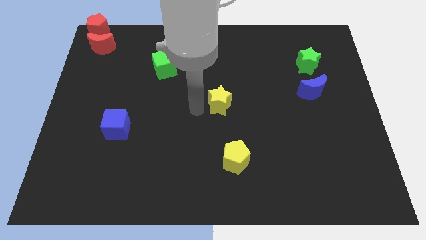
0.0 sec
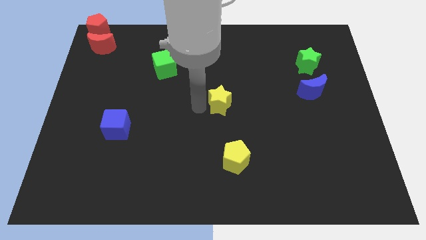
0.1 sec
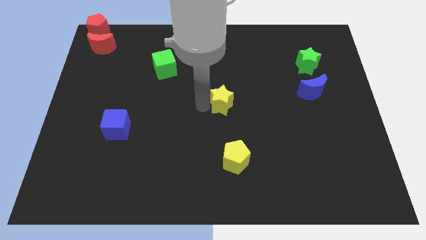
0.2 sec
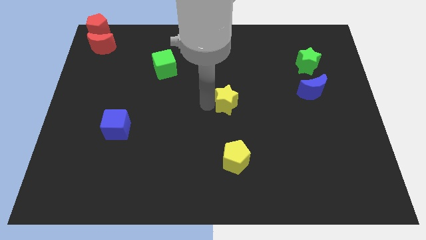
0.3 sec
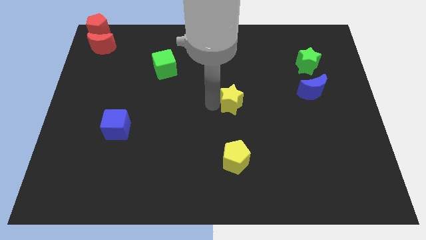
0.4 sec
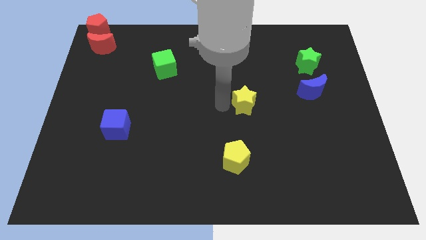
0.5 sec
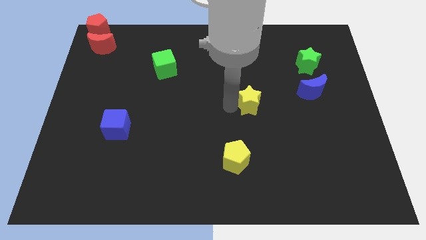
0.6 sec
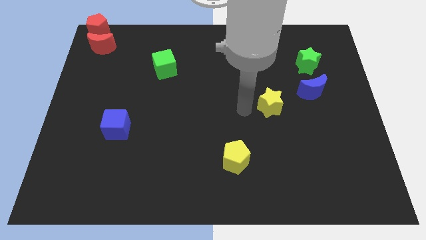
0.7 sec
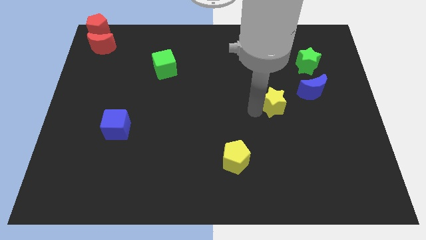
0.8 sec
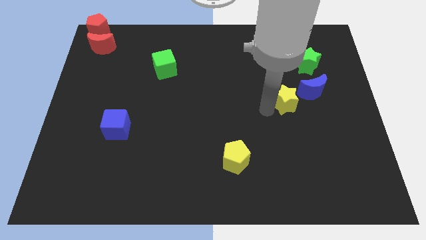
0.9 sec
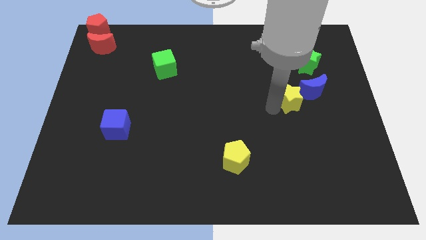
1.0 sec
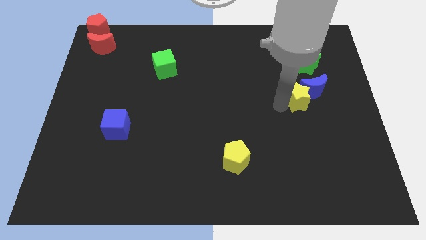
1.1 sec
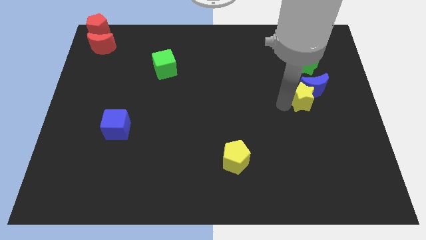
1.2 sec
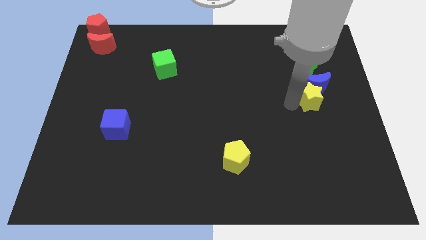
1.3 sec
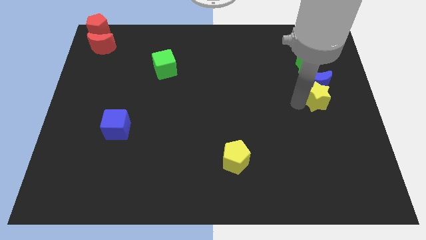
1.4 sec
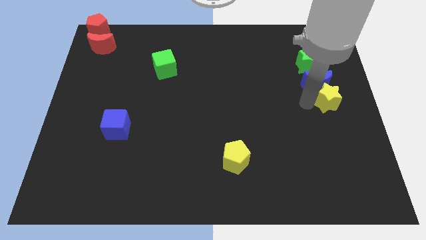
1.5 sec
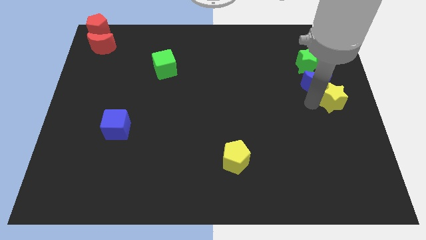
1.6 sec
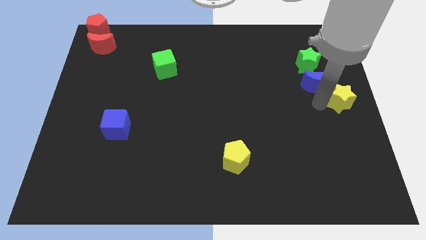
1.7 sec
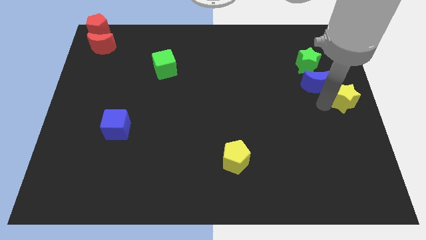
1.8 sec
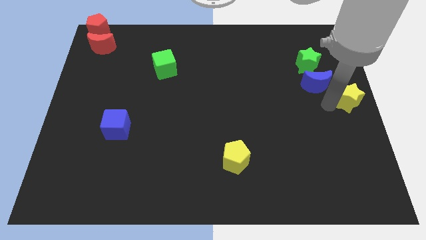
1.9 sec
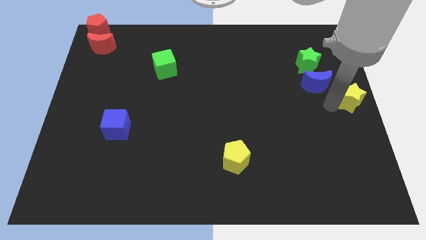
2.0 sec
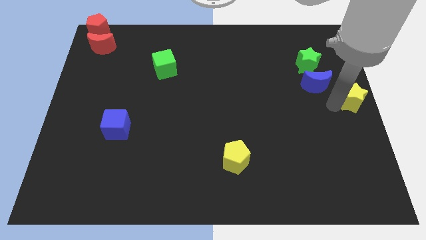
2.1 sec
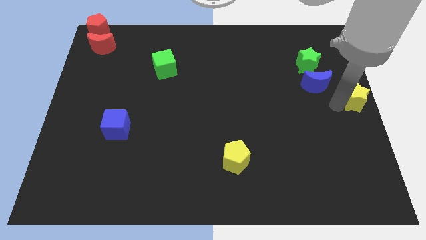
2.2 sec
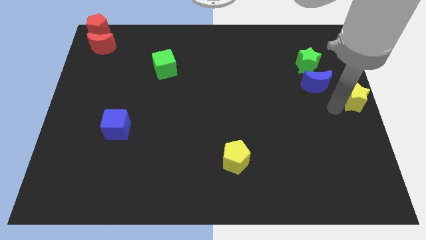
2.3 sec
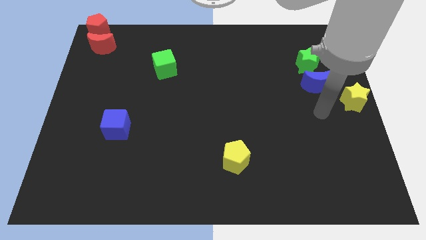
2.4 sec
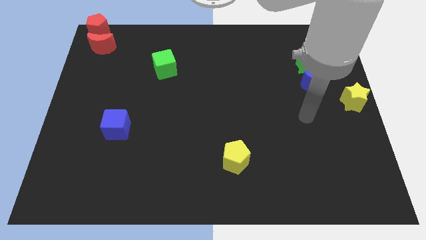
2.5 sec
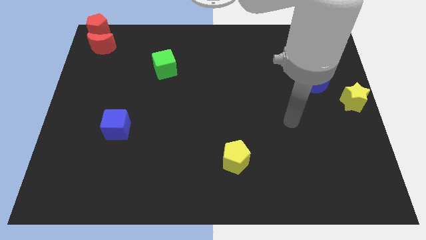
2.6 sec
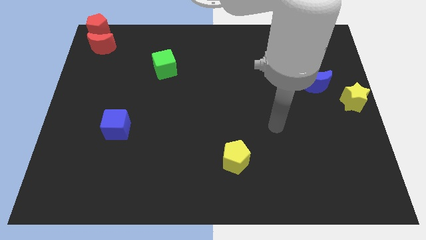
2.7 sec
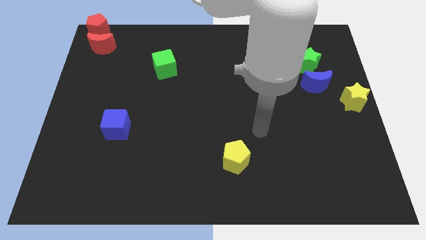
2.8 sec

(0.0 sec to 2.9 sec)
place yellow star at the center right

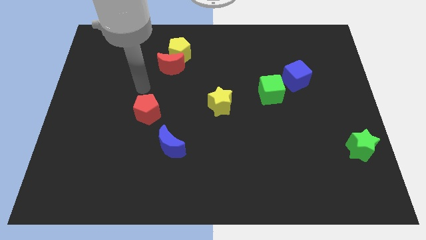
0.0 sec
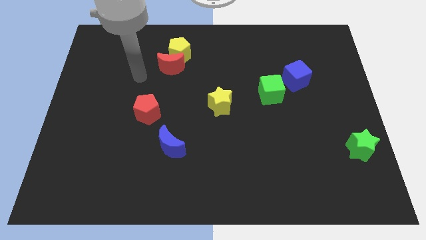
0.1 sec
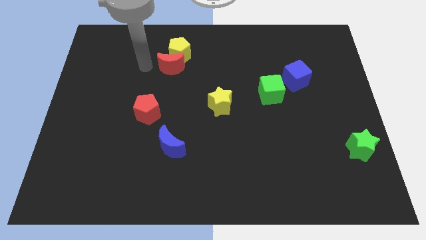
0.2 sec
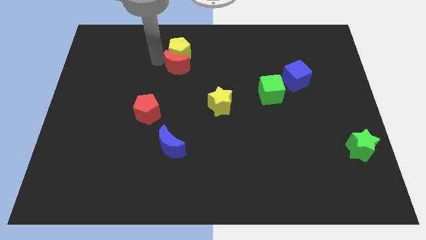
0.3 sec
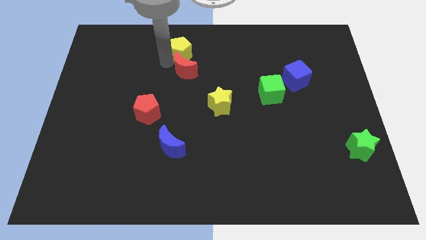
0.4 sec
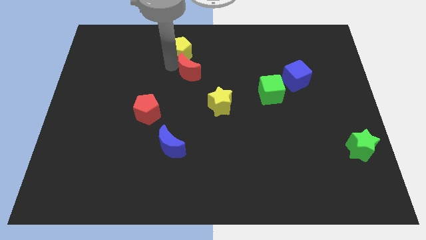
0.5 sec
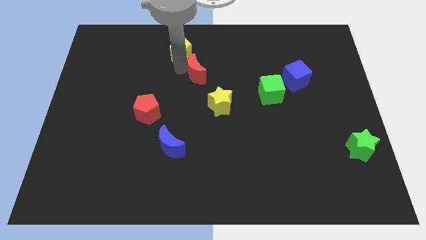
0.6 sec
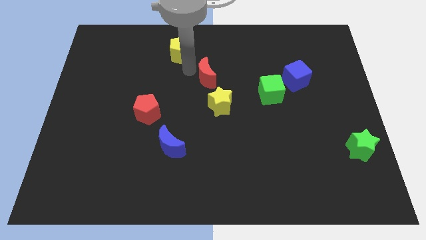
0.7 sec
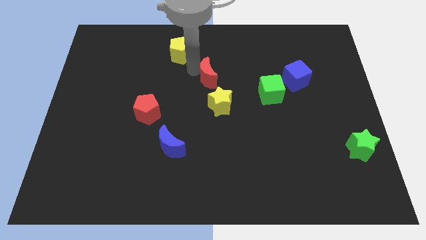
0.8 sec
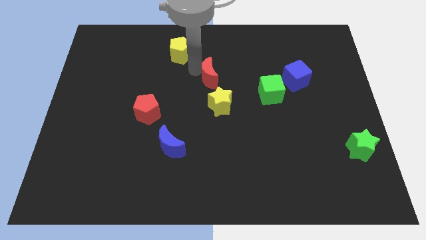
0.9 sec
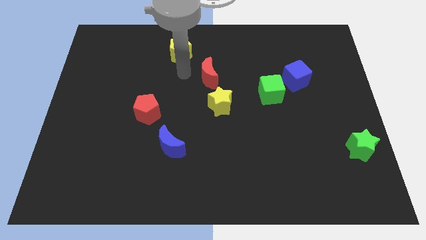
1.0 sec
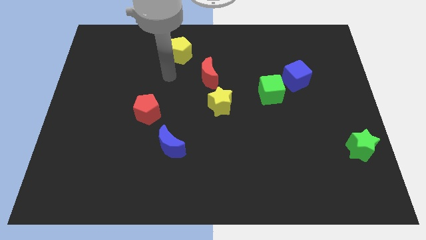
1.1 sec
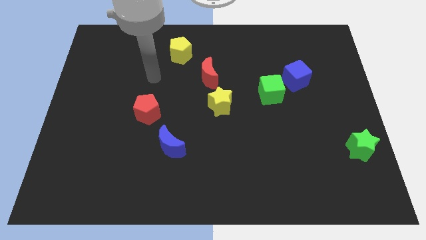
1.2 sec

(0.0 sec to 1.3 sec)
separate the red moon from the yellow pentagon

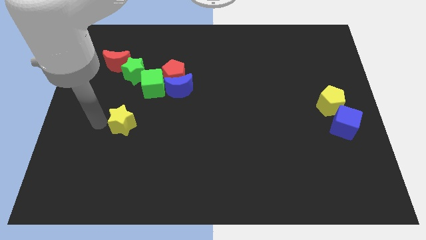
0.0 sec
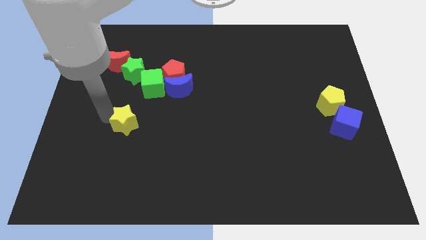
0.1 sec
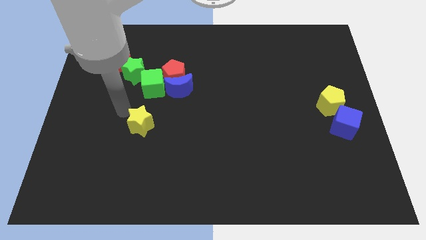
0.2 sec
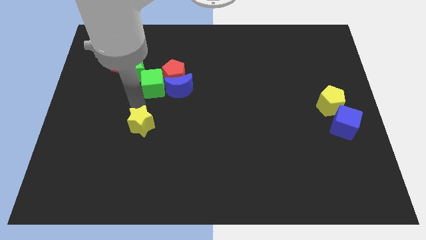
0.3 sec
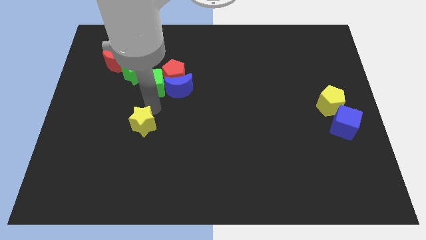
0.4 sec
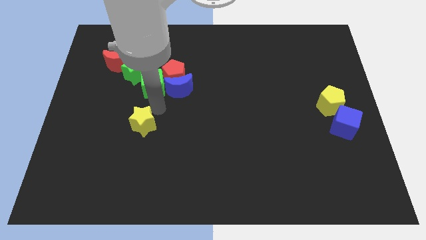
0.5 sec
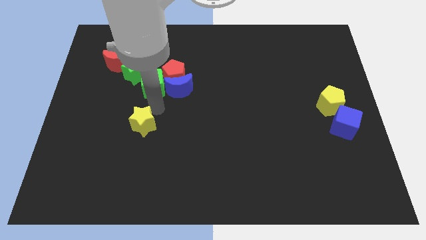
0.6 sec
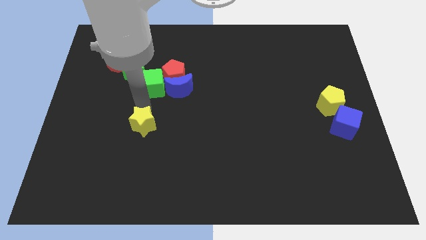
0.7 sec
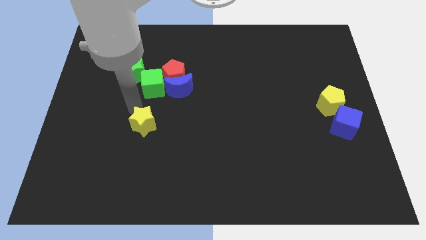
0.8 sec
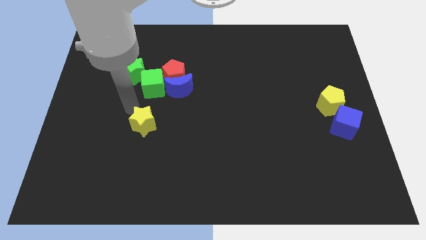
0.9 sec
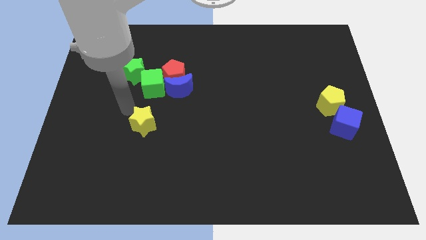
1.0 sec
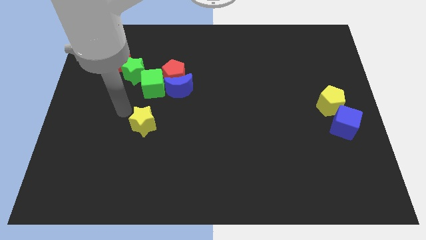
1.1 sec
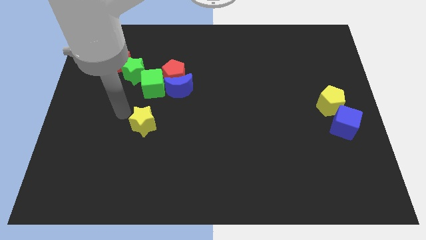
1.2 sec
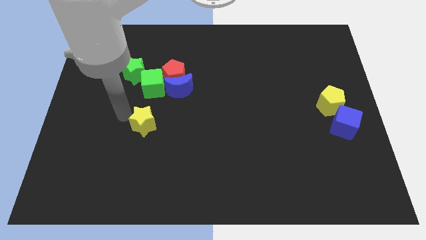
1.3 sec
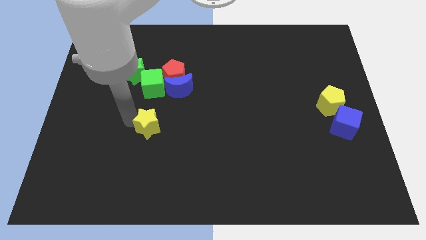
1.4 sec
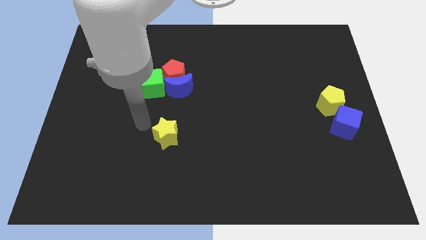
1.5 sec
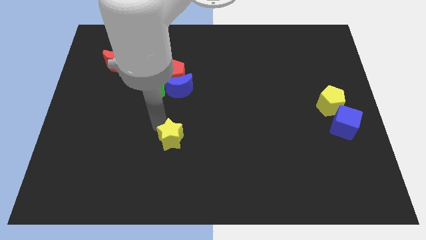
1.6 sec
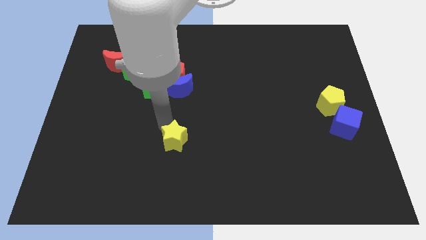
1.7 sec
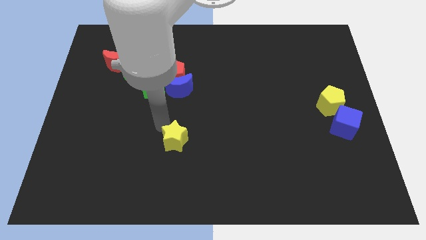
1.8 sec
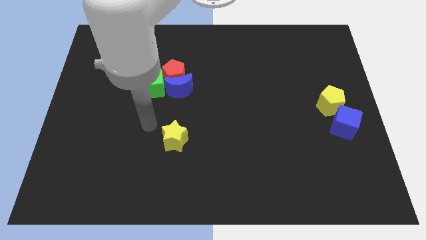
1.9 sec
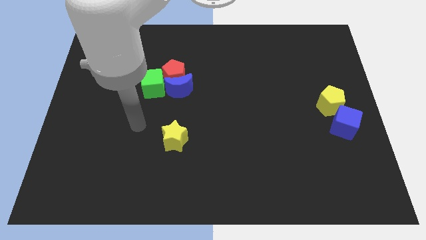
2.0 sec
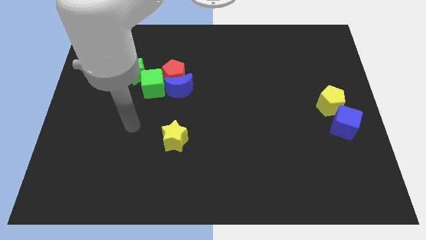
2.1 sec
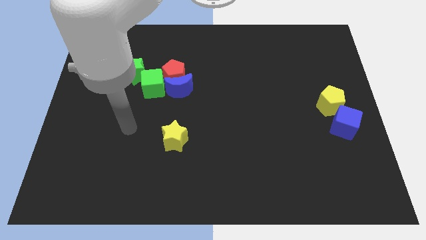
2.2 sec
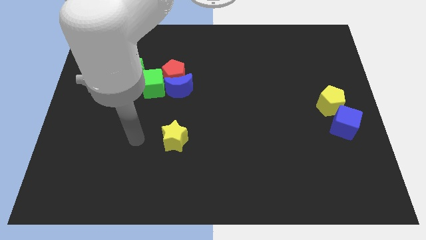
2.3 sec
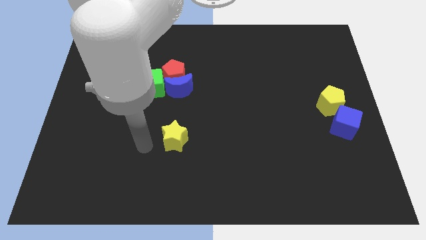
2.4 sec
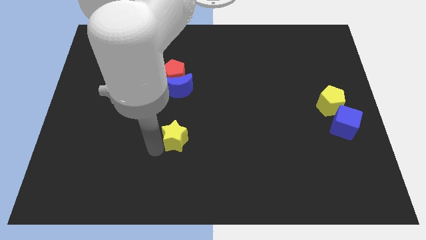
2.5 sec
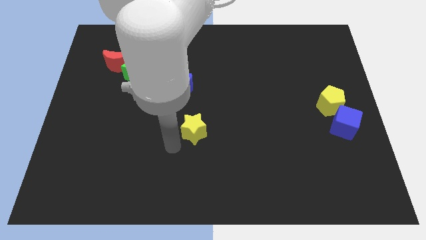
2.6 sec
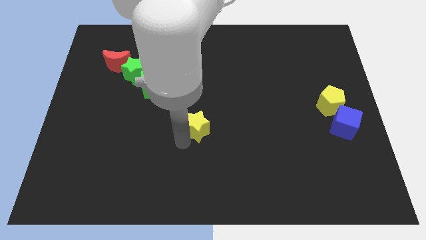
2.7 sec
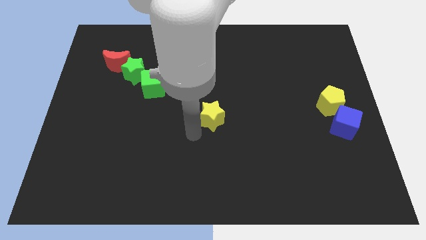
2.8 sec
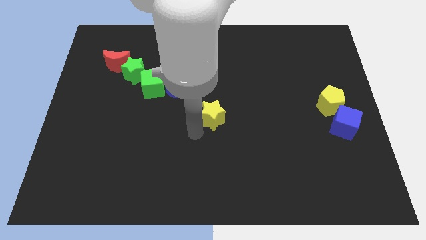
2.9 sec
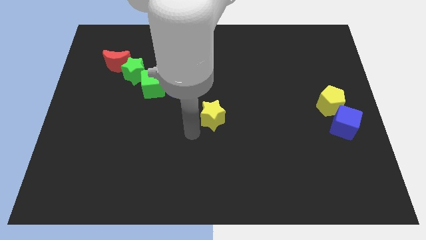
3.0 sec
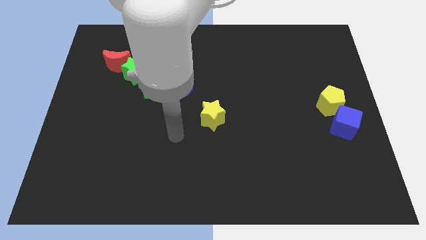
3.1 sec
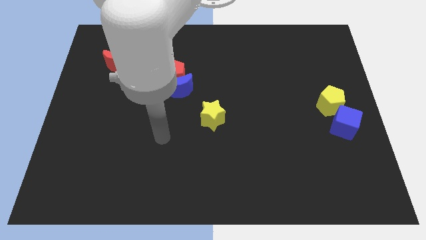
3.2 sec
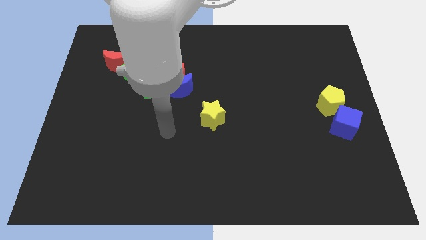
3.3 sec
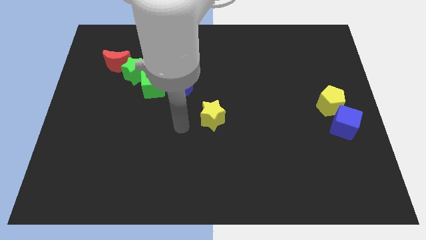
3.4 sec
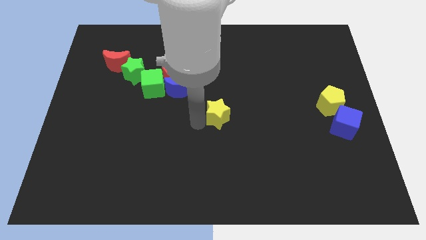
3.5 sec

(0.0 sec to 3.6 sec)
move yellow star at center

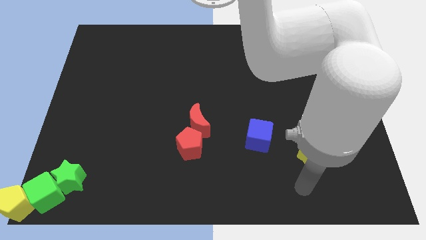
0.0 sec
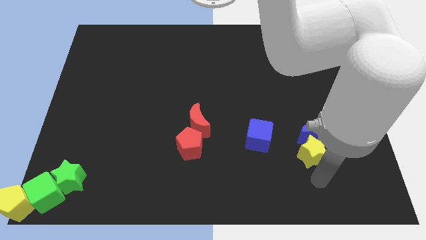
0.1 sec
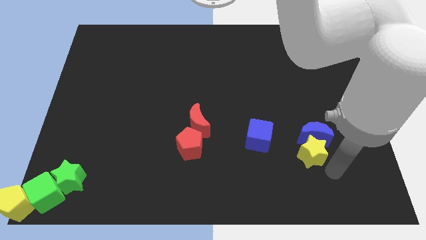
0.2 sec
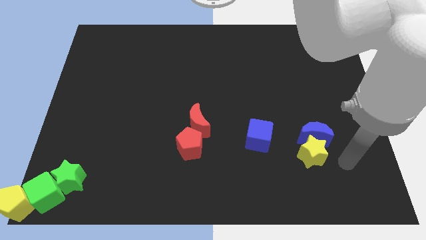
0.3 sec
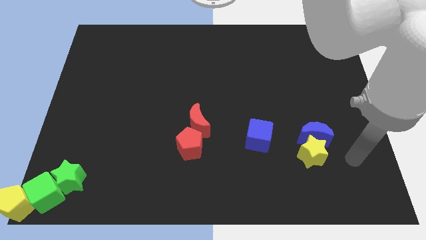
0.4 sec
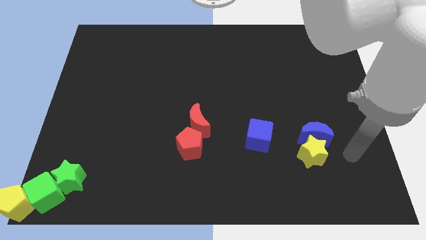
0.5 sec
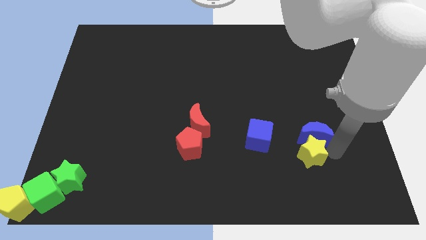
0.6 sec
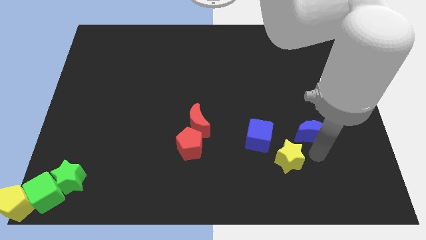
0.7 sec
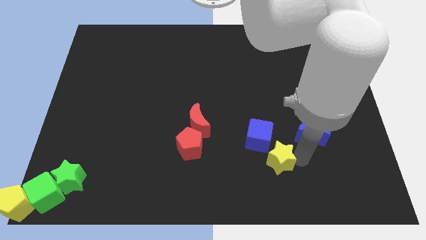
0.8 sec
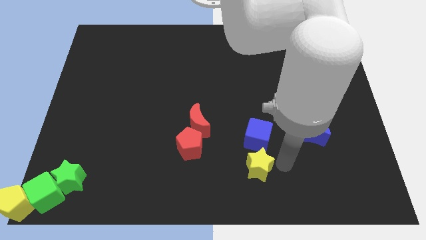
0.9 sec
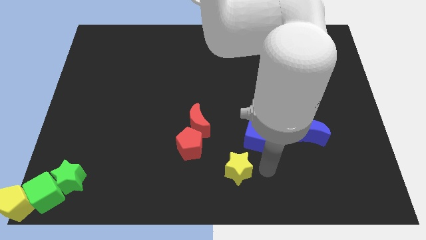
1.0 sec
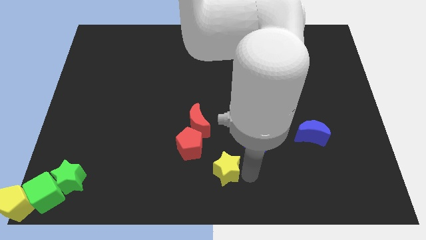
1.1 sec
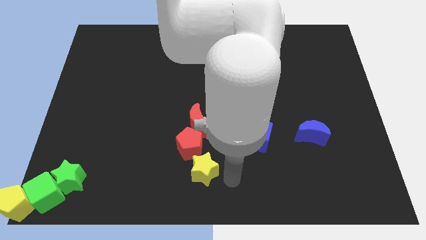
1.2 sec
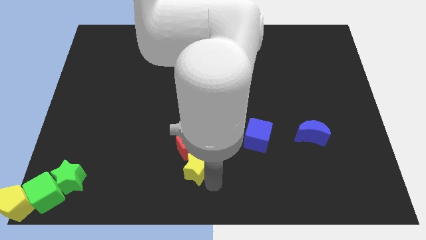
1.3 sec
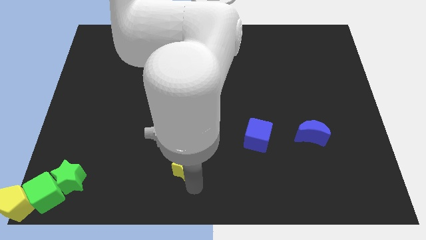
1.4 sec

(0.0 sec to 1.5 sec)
move yellow star below the red pentagon
